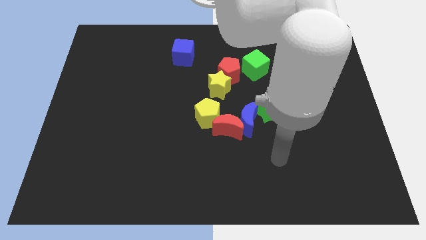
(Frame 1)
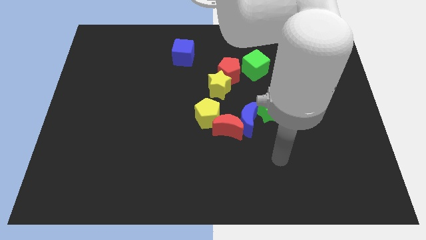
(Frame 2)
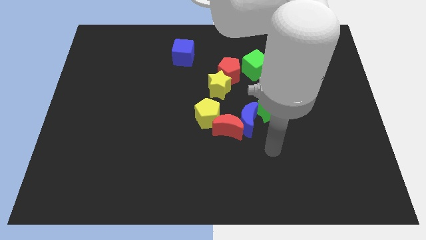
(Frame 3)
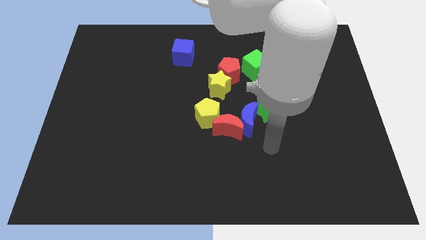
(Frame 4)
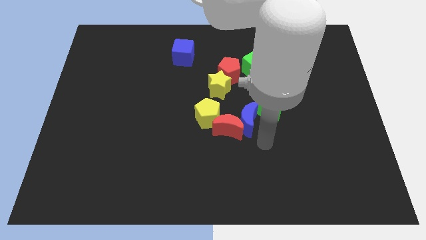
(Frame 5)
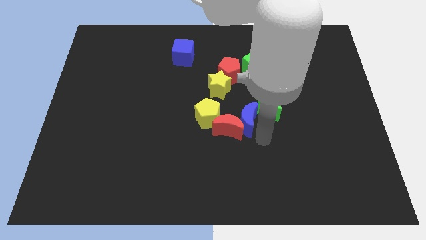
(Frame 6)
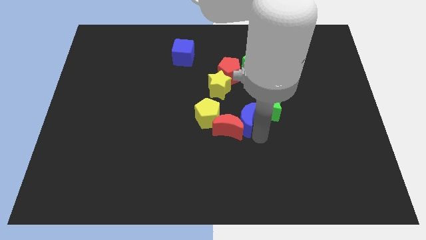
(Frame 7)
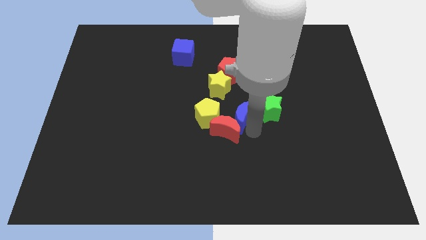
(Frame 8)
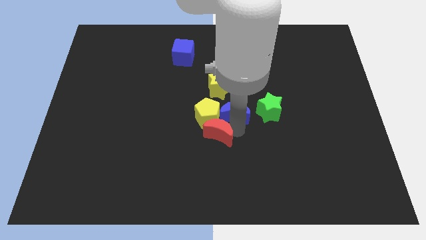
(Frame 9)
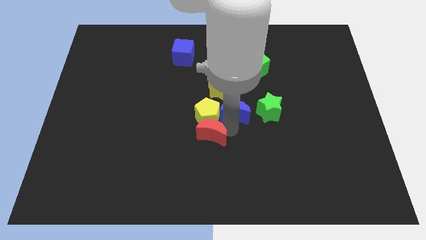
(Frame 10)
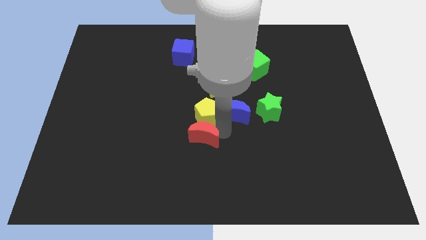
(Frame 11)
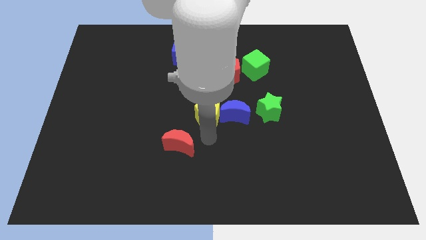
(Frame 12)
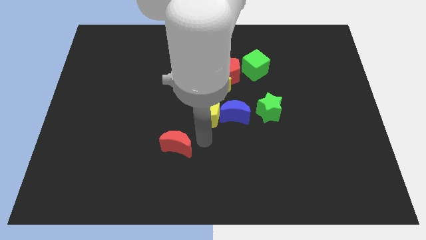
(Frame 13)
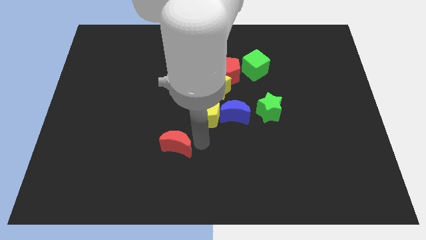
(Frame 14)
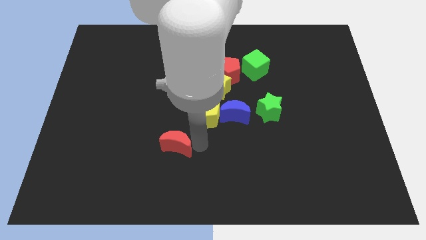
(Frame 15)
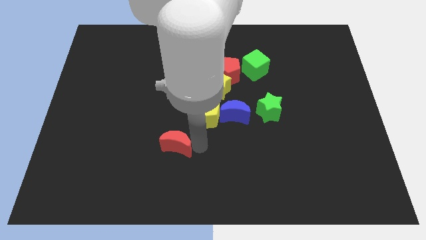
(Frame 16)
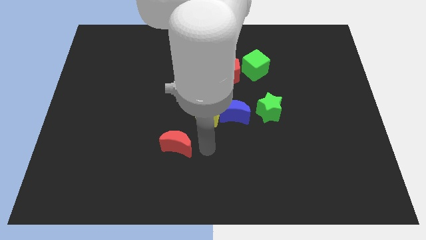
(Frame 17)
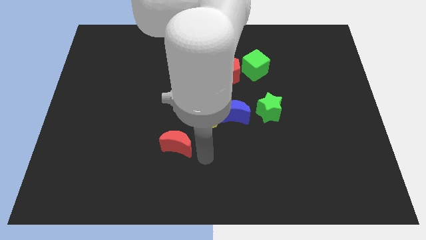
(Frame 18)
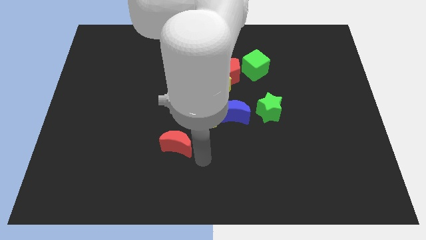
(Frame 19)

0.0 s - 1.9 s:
separate the crescents

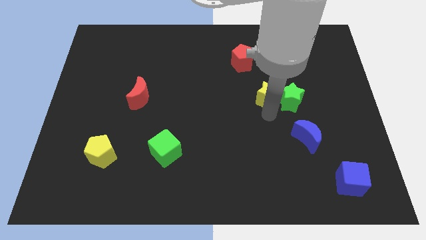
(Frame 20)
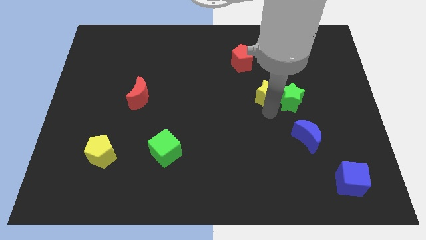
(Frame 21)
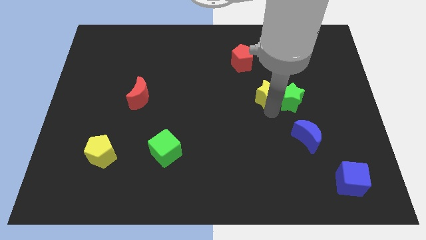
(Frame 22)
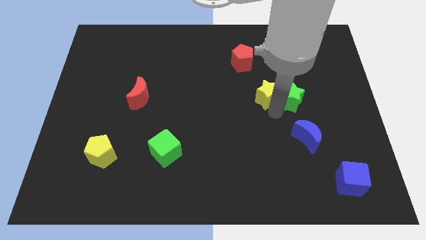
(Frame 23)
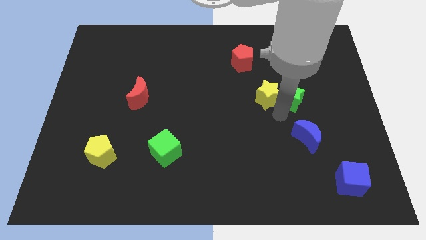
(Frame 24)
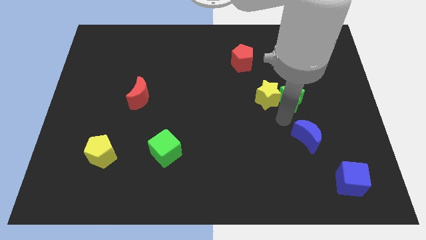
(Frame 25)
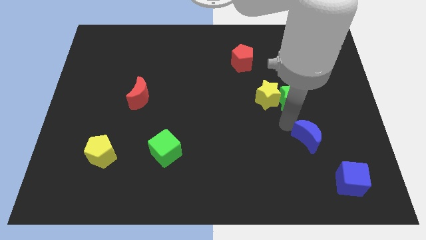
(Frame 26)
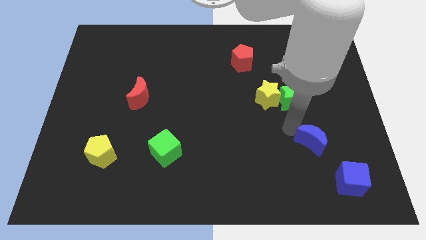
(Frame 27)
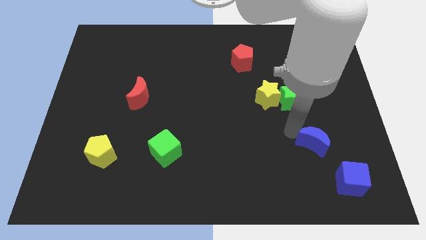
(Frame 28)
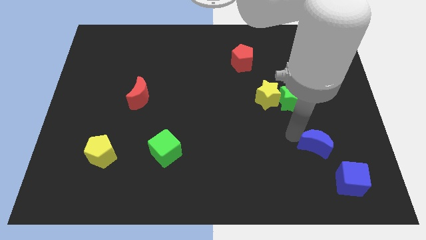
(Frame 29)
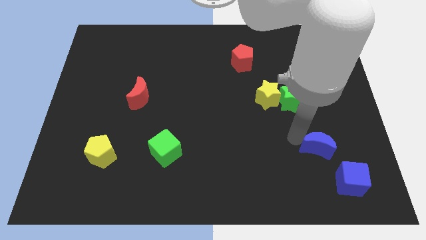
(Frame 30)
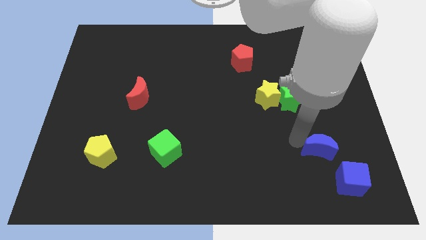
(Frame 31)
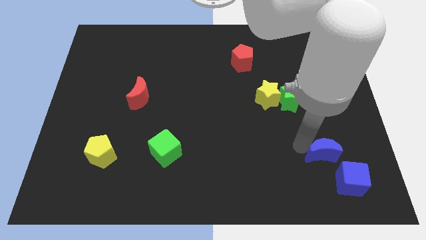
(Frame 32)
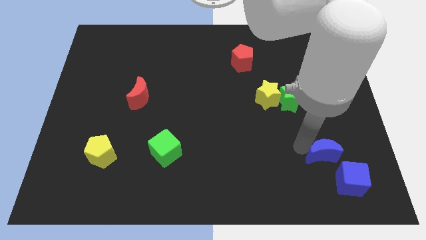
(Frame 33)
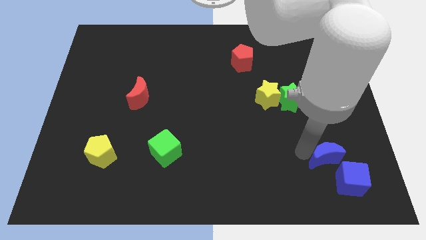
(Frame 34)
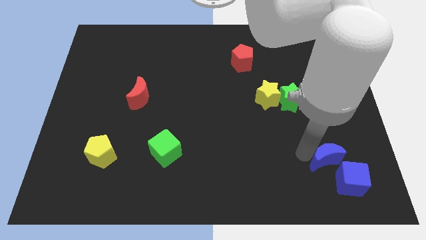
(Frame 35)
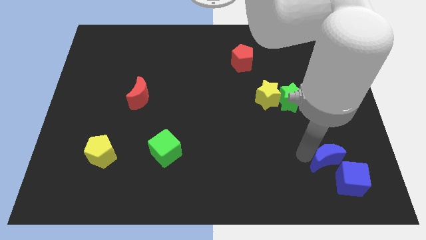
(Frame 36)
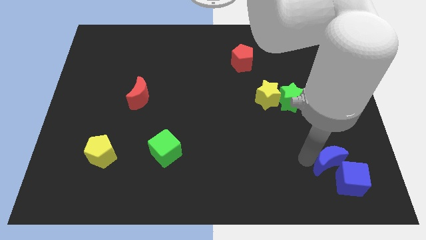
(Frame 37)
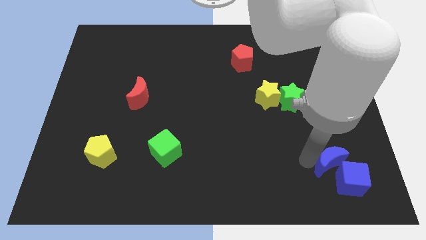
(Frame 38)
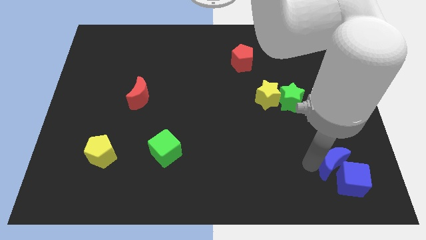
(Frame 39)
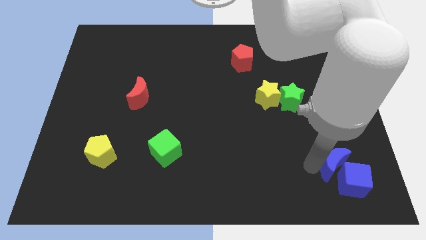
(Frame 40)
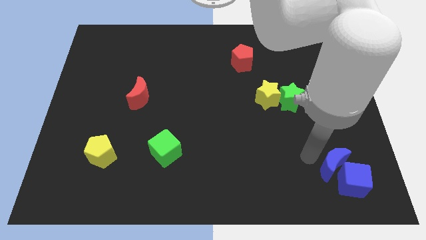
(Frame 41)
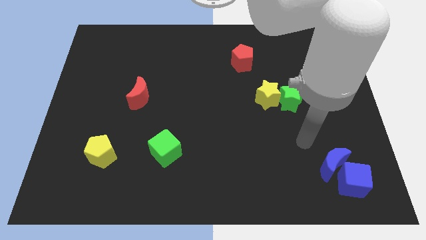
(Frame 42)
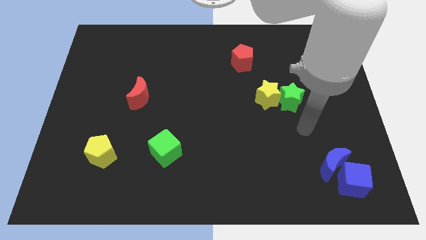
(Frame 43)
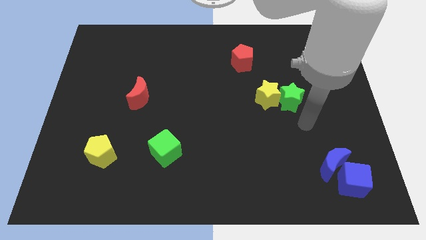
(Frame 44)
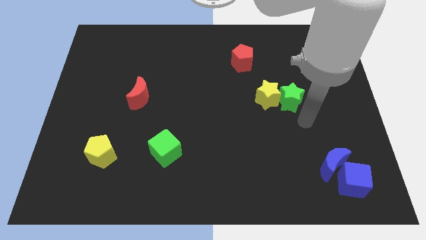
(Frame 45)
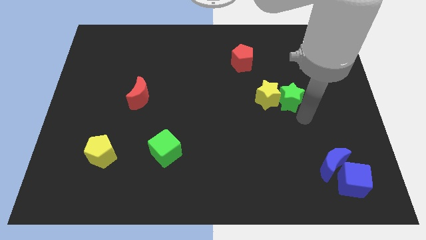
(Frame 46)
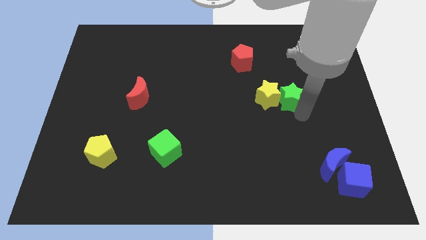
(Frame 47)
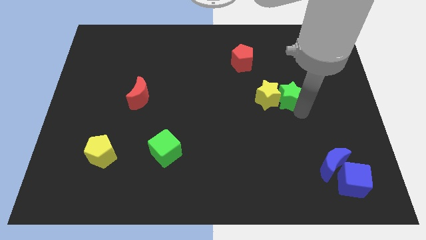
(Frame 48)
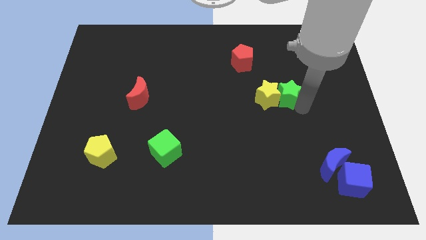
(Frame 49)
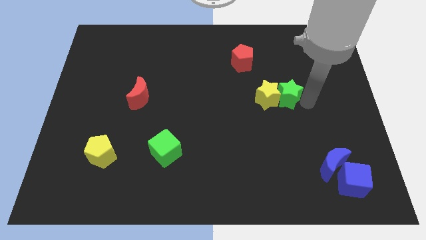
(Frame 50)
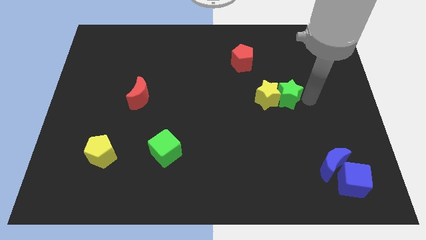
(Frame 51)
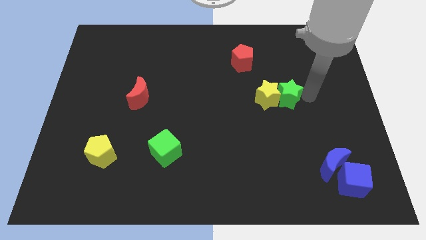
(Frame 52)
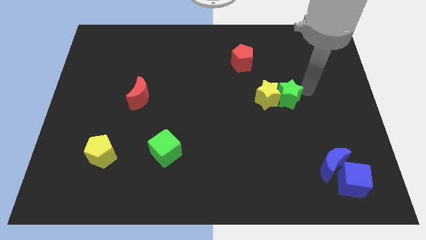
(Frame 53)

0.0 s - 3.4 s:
move blue crescent into the blue cube

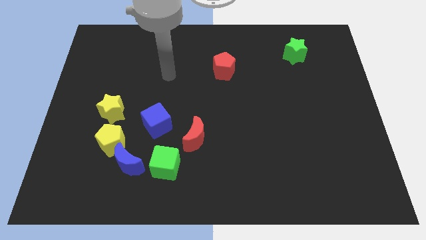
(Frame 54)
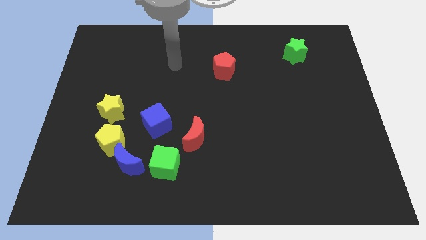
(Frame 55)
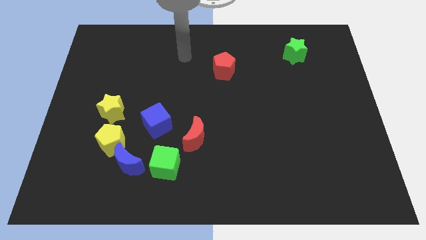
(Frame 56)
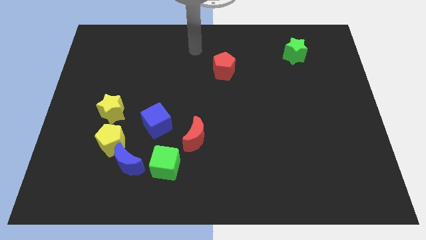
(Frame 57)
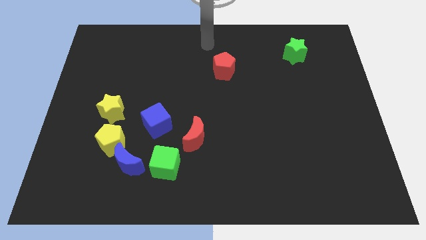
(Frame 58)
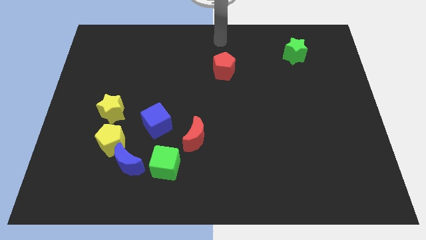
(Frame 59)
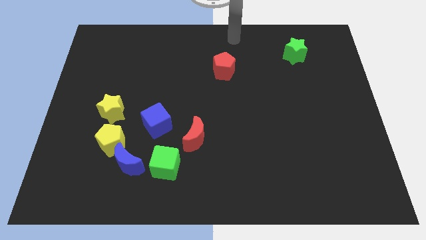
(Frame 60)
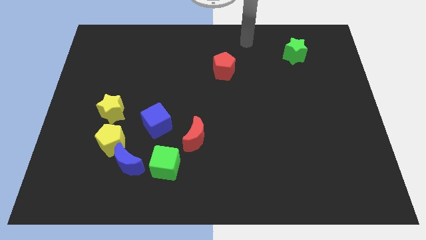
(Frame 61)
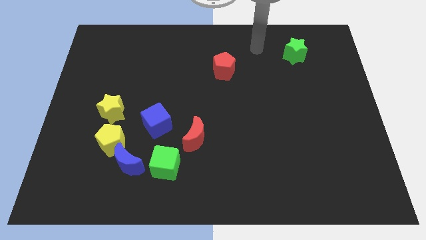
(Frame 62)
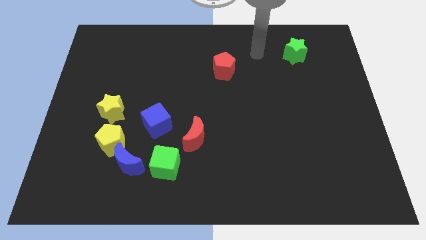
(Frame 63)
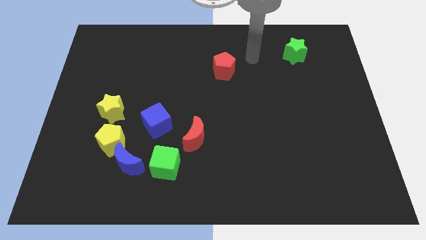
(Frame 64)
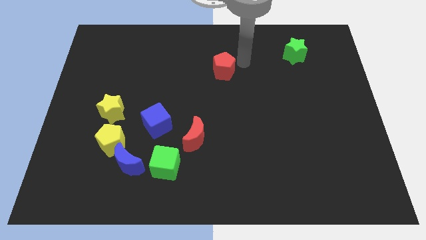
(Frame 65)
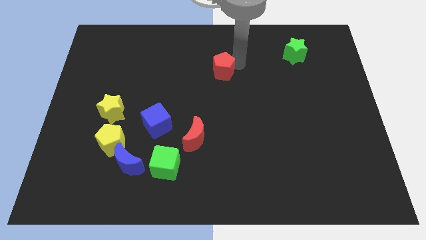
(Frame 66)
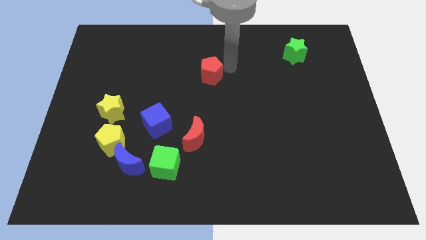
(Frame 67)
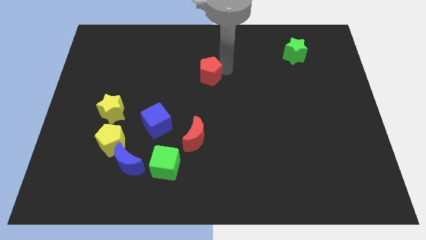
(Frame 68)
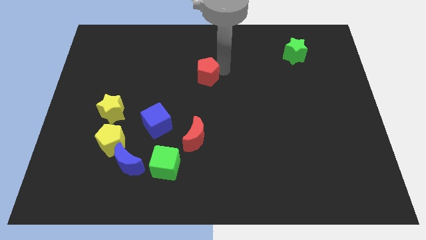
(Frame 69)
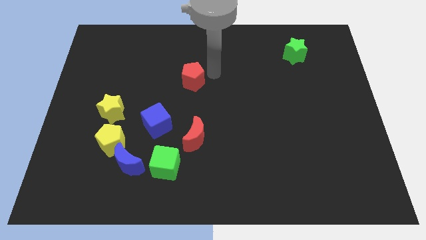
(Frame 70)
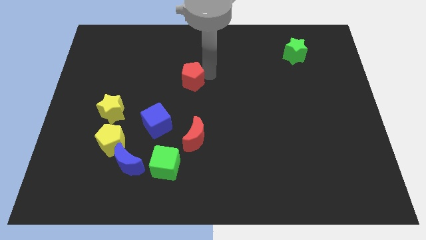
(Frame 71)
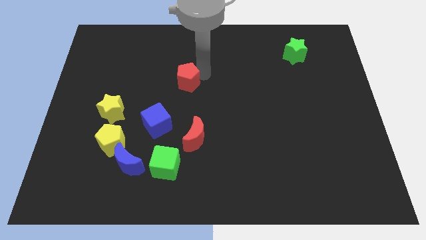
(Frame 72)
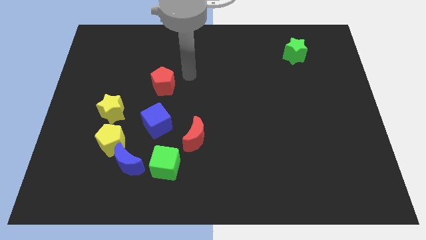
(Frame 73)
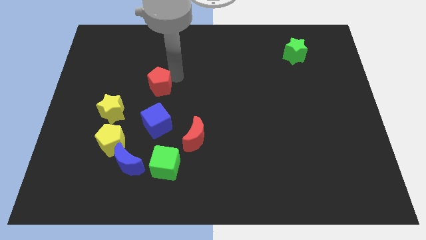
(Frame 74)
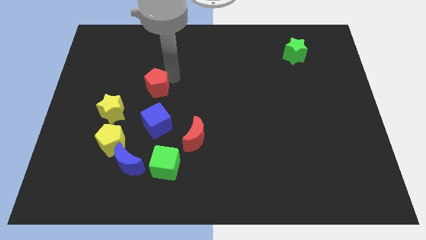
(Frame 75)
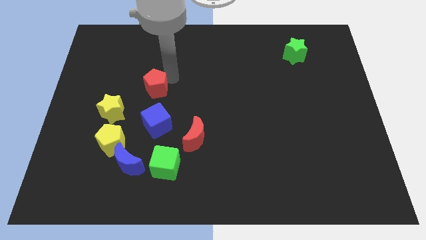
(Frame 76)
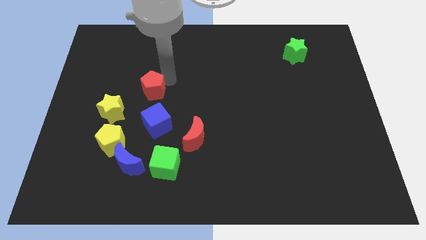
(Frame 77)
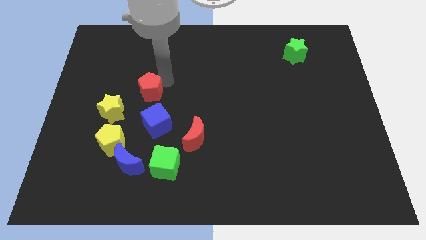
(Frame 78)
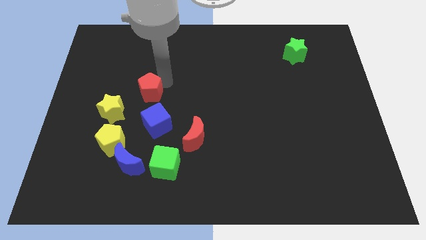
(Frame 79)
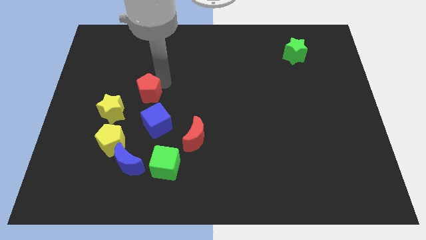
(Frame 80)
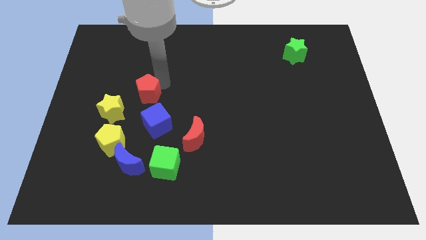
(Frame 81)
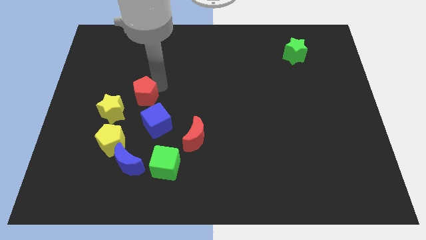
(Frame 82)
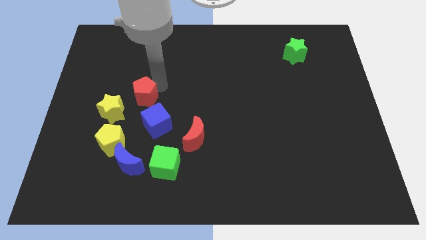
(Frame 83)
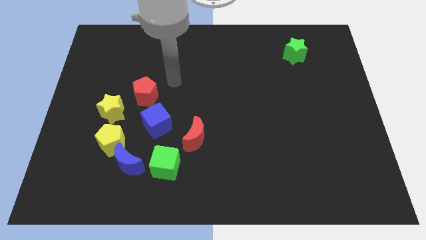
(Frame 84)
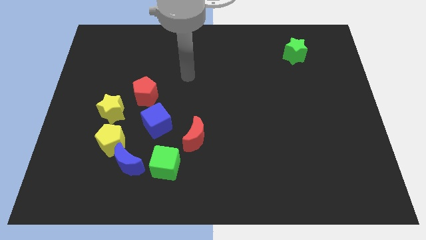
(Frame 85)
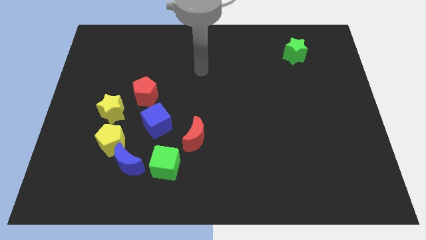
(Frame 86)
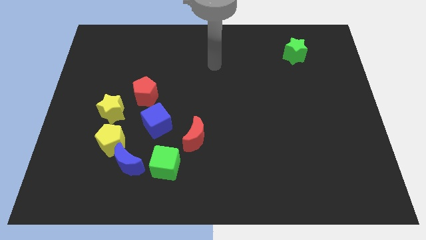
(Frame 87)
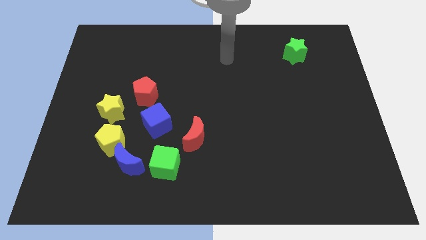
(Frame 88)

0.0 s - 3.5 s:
move the red pentagon to the group of blocks

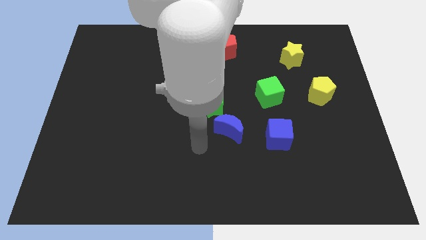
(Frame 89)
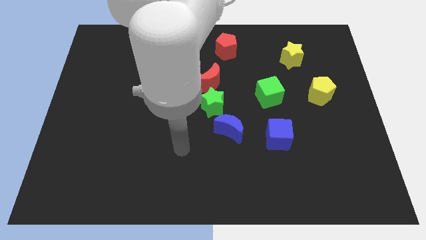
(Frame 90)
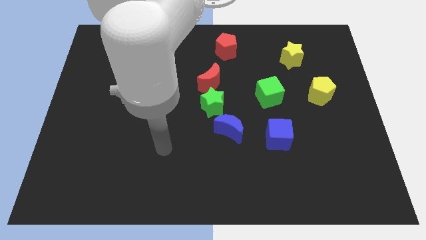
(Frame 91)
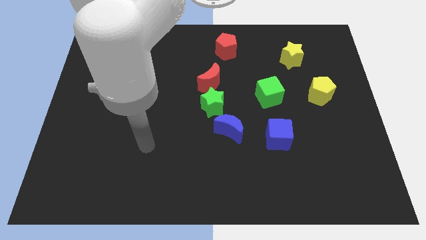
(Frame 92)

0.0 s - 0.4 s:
move your arm to the left center
